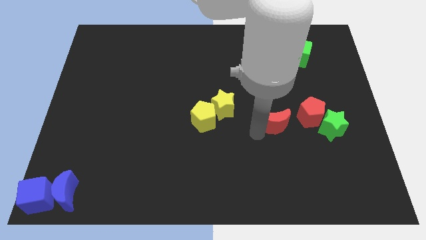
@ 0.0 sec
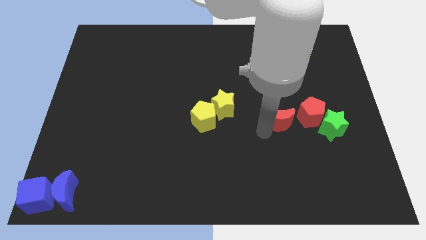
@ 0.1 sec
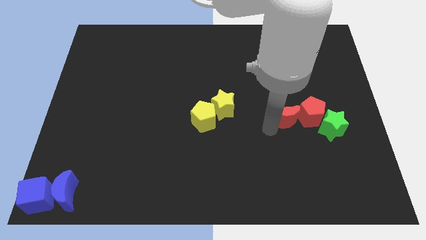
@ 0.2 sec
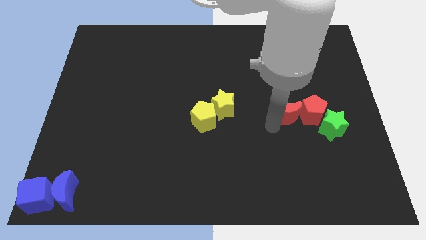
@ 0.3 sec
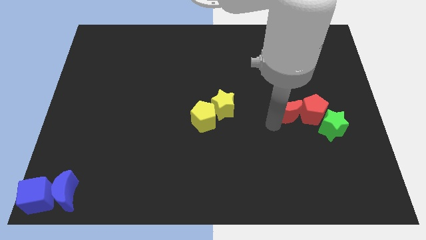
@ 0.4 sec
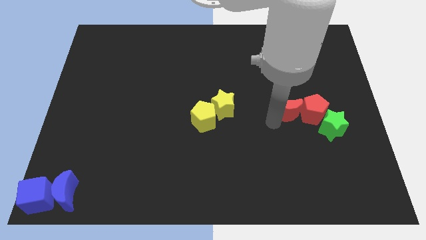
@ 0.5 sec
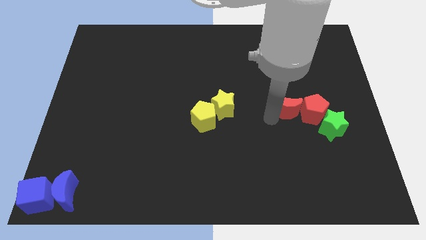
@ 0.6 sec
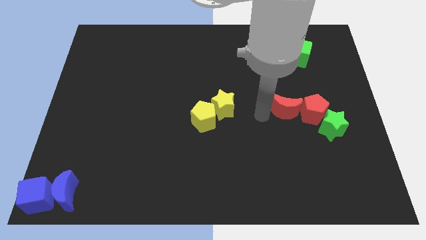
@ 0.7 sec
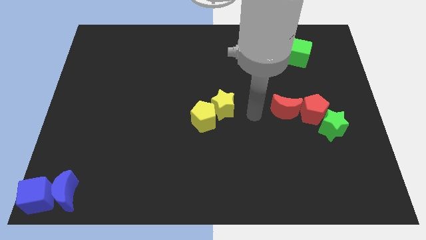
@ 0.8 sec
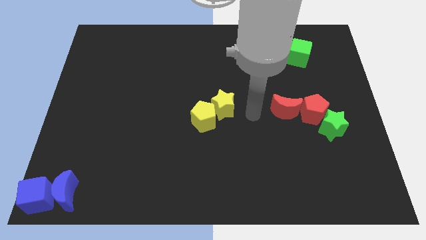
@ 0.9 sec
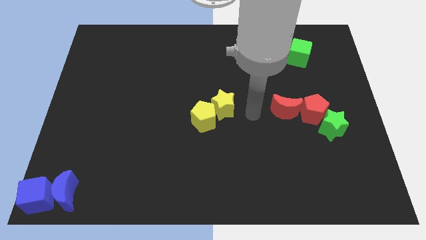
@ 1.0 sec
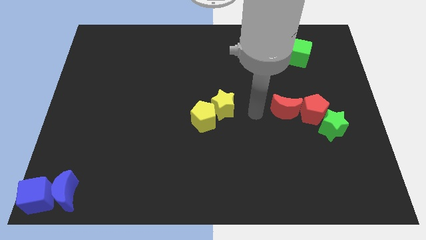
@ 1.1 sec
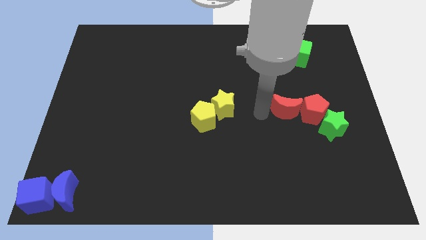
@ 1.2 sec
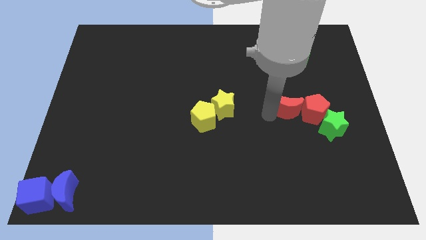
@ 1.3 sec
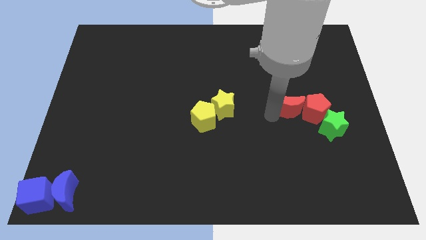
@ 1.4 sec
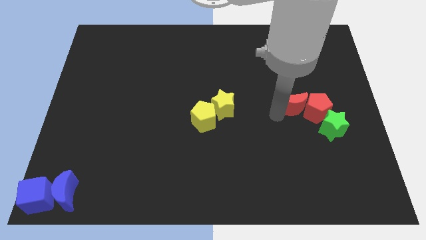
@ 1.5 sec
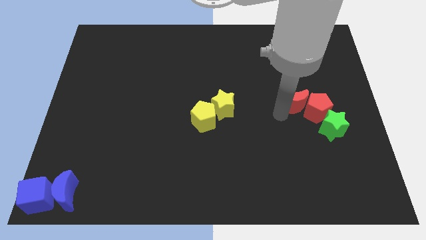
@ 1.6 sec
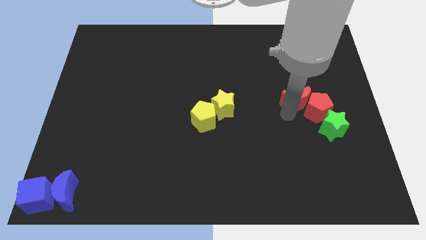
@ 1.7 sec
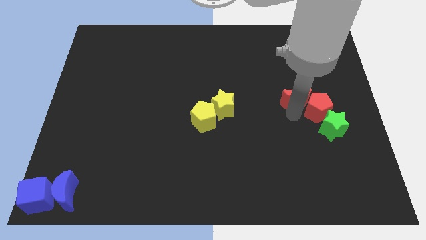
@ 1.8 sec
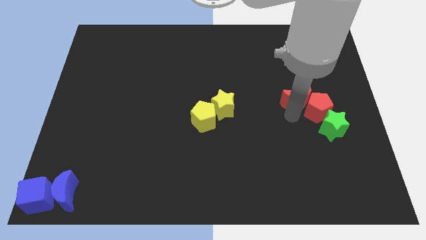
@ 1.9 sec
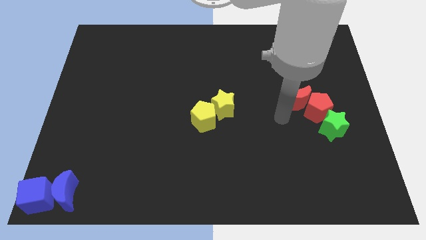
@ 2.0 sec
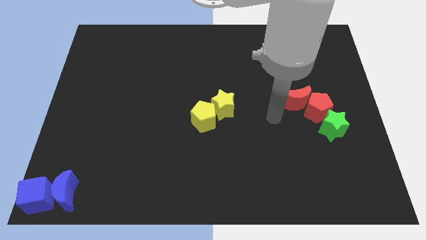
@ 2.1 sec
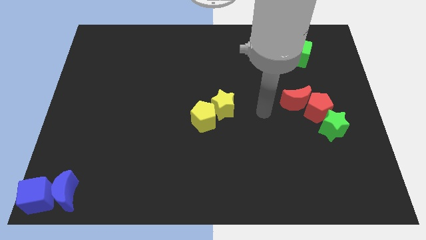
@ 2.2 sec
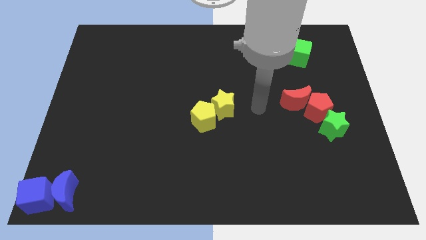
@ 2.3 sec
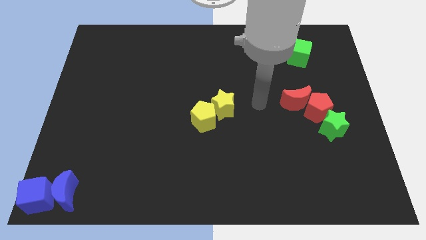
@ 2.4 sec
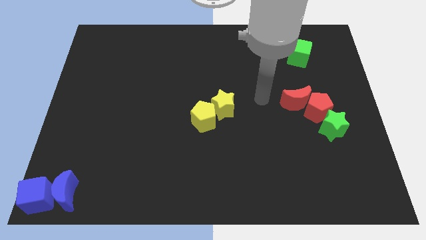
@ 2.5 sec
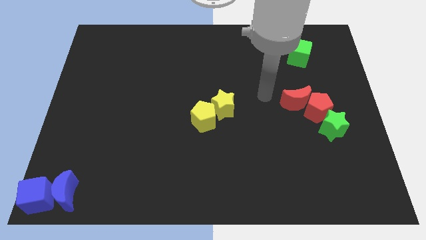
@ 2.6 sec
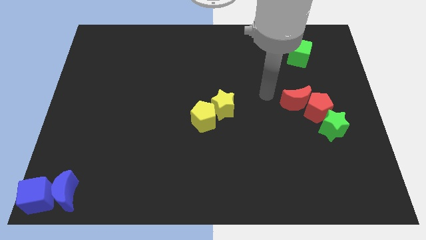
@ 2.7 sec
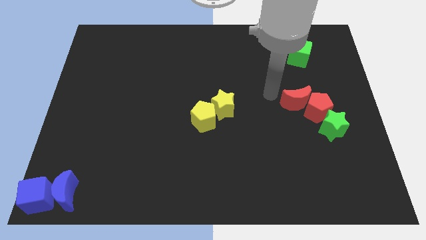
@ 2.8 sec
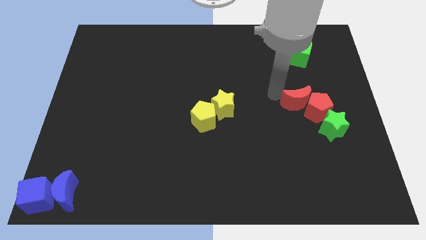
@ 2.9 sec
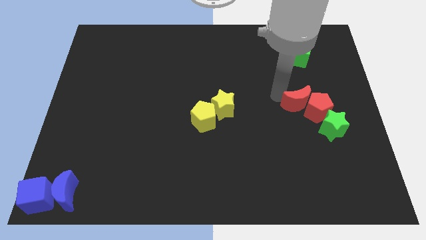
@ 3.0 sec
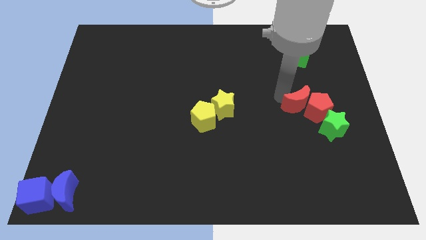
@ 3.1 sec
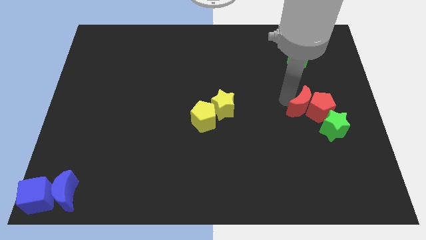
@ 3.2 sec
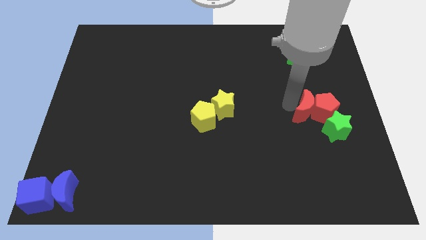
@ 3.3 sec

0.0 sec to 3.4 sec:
push red crescent into red pentagon

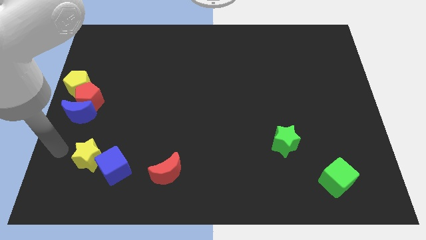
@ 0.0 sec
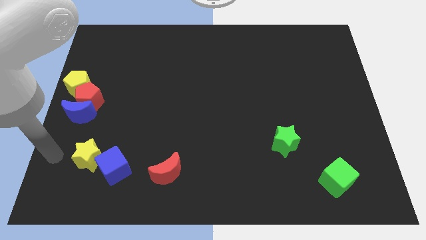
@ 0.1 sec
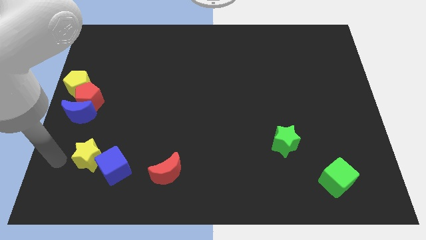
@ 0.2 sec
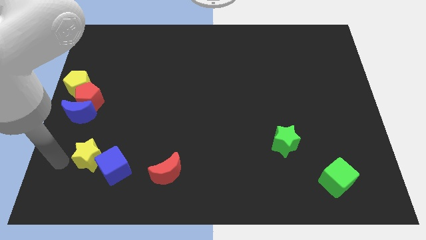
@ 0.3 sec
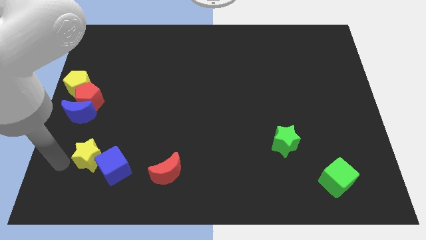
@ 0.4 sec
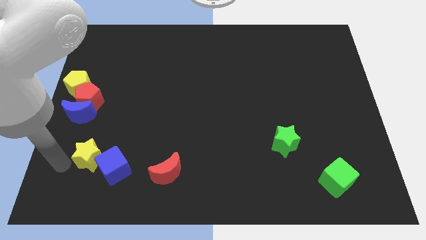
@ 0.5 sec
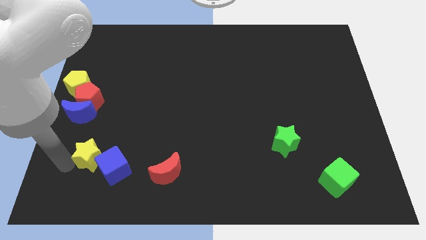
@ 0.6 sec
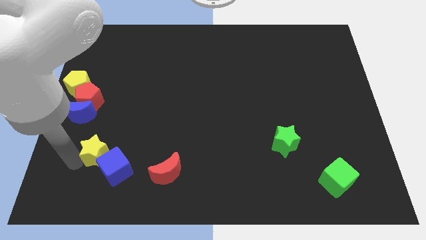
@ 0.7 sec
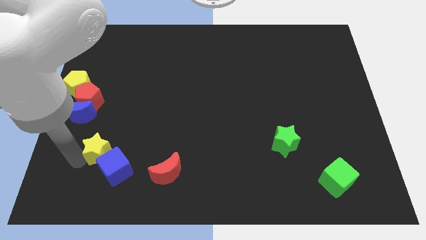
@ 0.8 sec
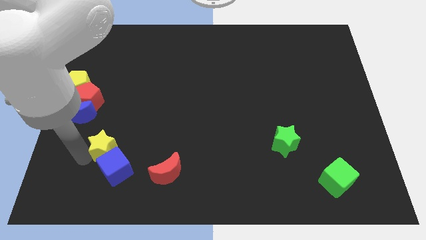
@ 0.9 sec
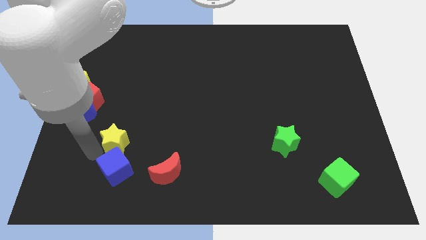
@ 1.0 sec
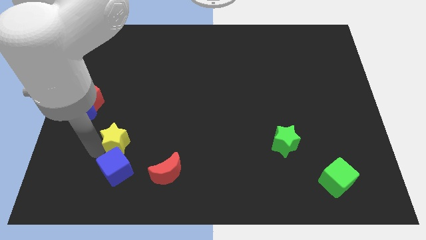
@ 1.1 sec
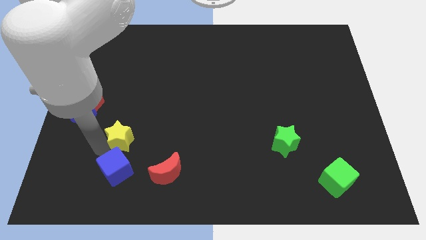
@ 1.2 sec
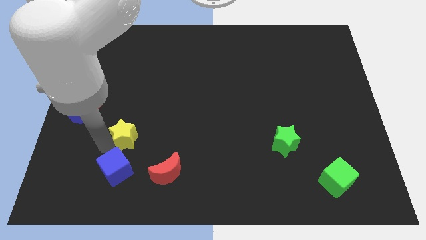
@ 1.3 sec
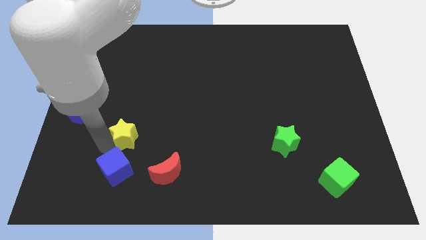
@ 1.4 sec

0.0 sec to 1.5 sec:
move the yellow star above the blue cube

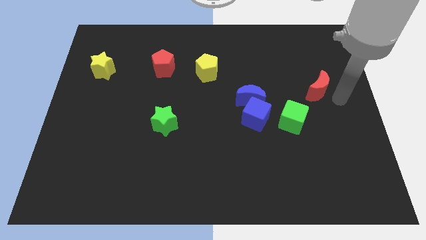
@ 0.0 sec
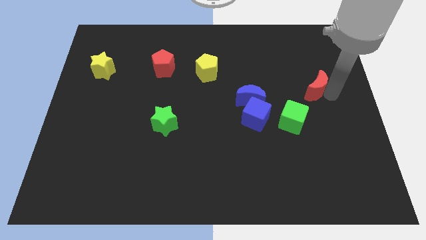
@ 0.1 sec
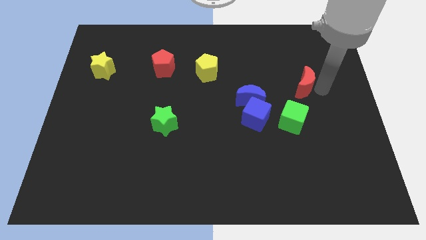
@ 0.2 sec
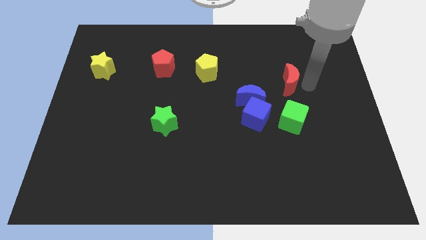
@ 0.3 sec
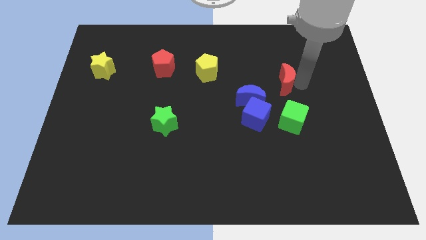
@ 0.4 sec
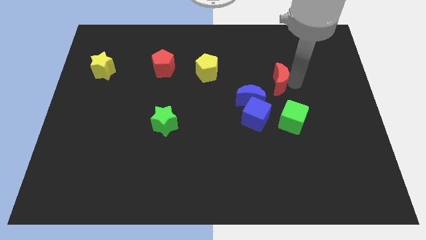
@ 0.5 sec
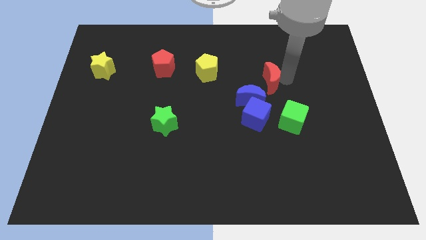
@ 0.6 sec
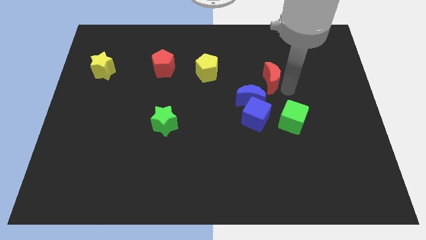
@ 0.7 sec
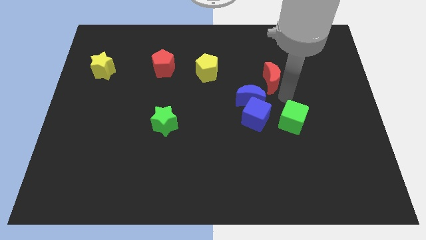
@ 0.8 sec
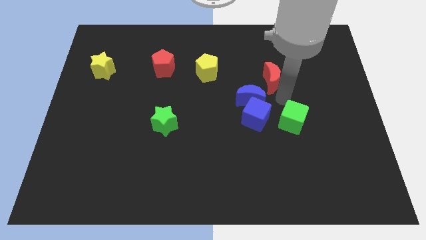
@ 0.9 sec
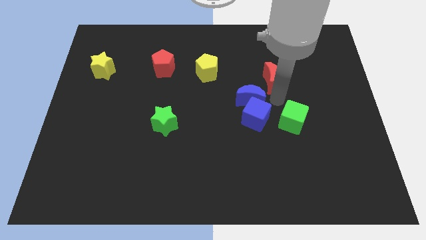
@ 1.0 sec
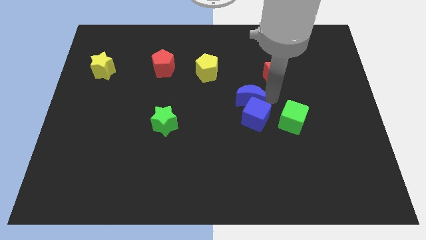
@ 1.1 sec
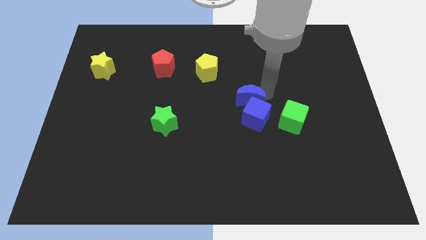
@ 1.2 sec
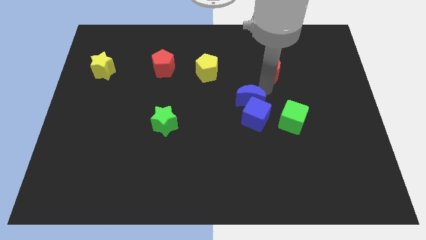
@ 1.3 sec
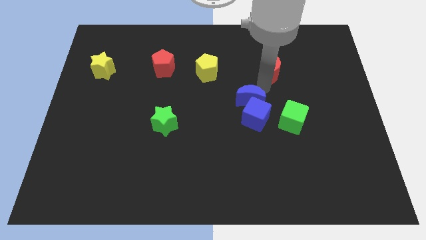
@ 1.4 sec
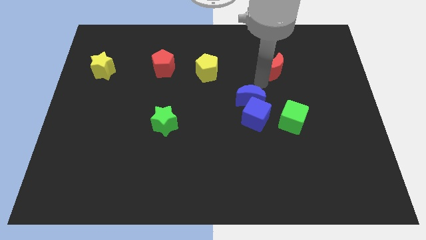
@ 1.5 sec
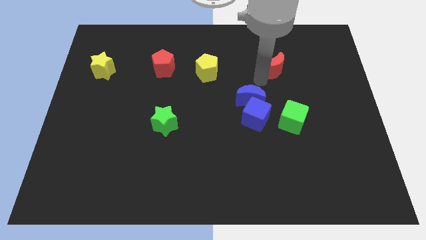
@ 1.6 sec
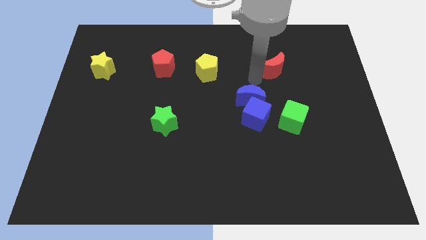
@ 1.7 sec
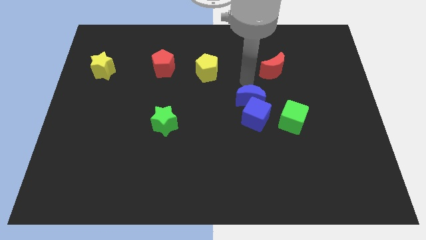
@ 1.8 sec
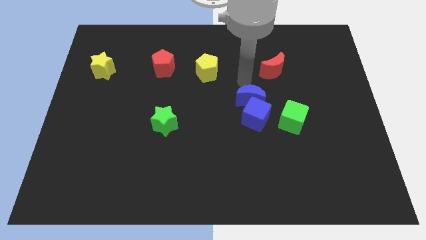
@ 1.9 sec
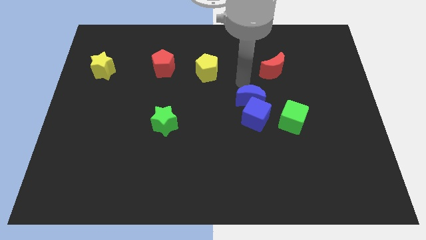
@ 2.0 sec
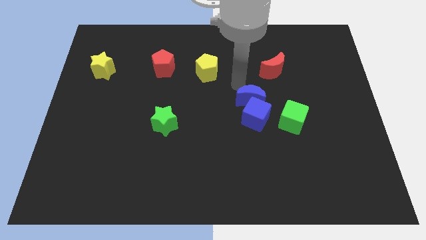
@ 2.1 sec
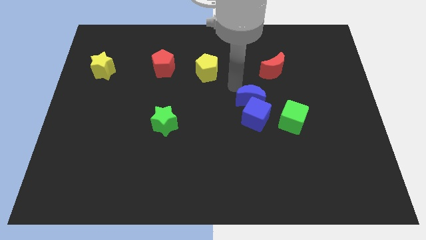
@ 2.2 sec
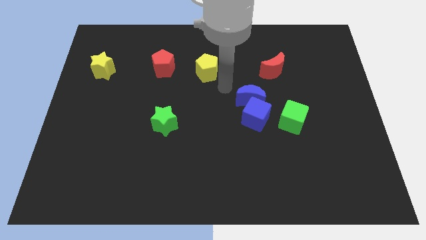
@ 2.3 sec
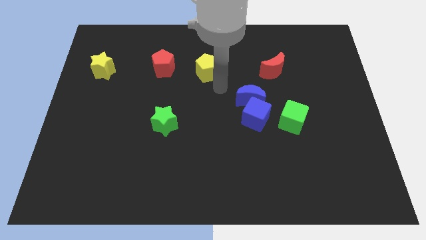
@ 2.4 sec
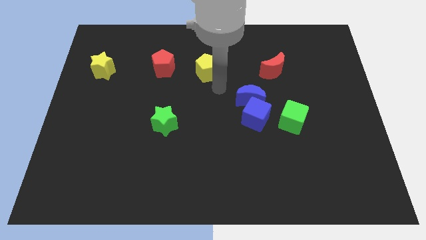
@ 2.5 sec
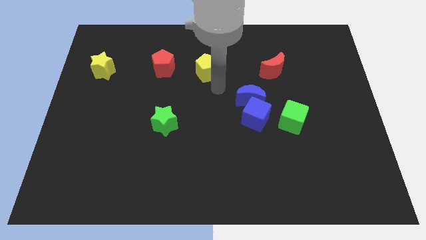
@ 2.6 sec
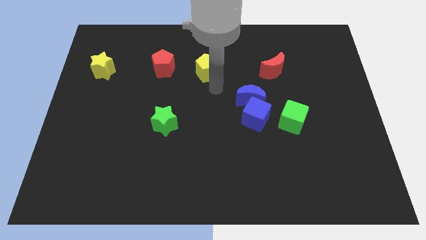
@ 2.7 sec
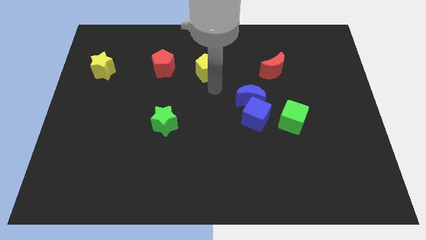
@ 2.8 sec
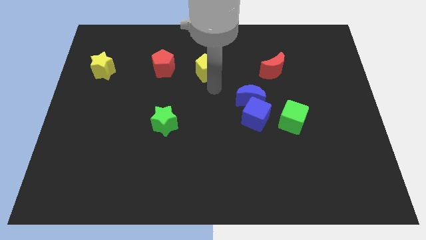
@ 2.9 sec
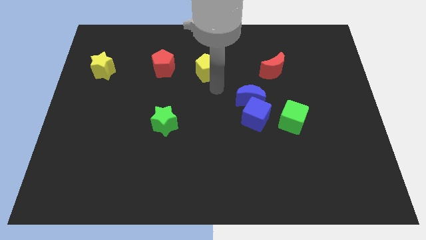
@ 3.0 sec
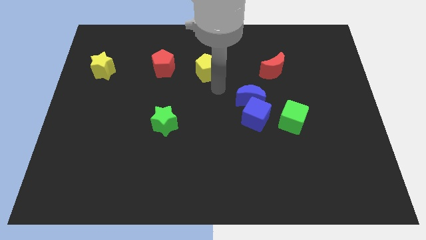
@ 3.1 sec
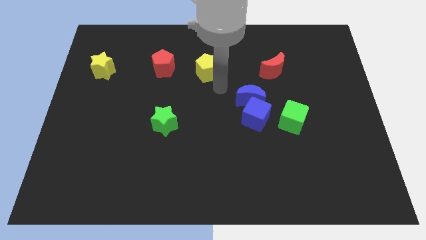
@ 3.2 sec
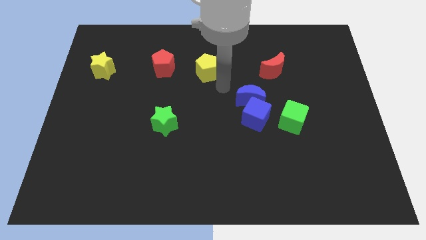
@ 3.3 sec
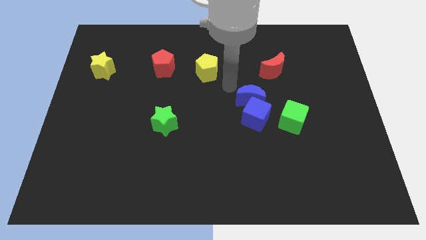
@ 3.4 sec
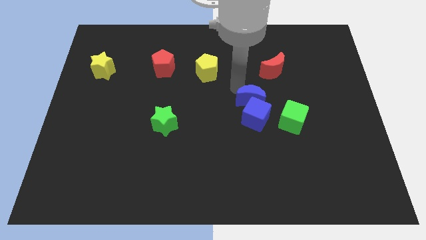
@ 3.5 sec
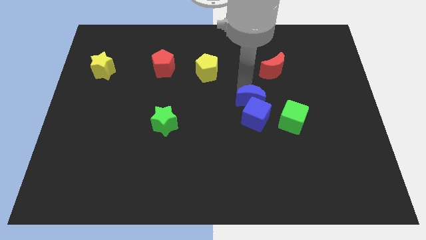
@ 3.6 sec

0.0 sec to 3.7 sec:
push red crescent to the center

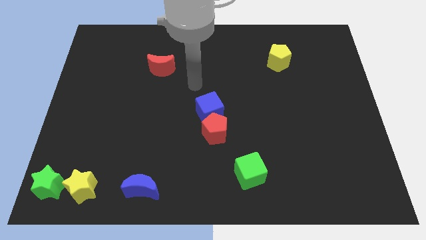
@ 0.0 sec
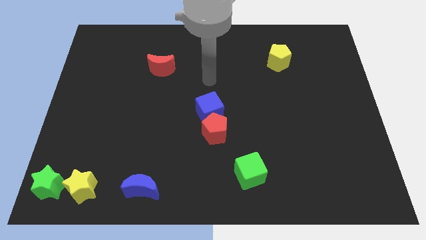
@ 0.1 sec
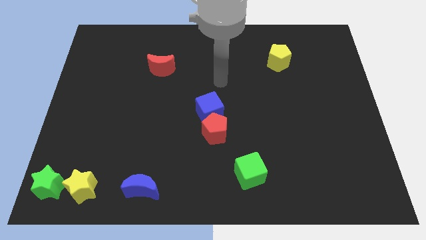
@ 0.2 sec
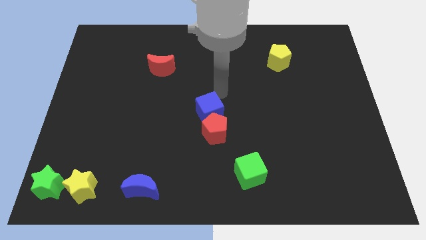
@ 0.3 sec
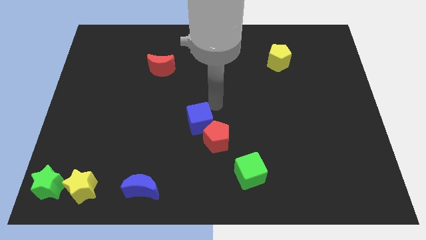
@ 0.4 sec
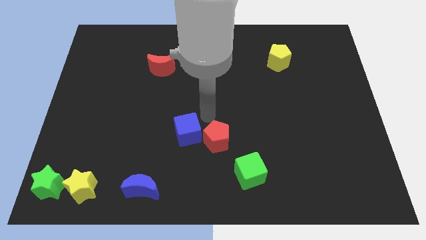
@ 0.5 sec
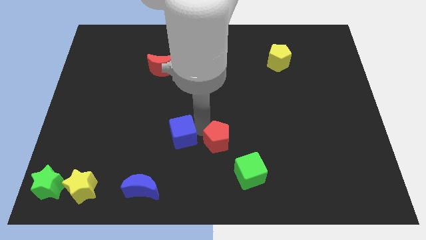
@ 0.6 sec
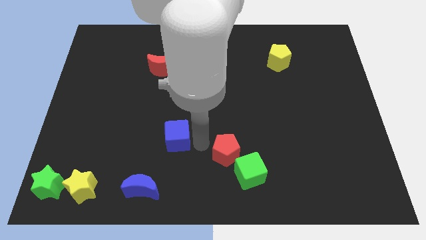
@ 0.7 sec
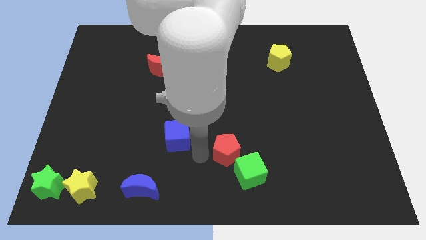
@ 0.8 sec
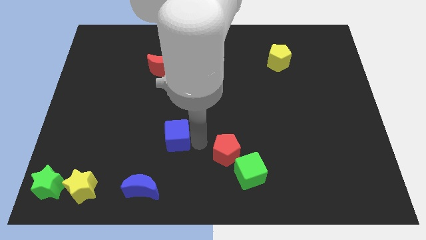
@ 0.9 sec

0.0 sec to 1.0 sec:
separate the blue cube and the red pentagon
